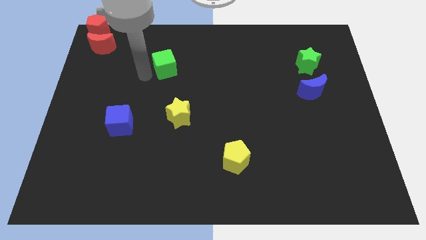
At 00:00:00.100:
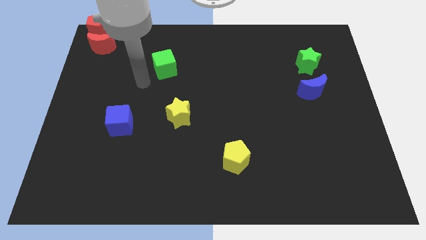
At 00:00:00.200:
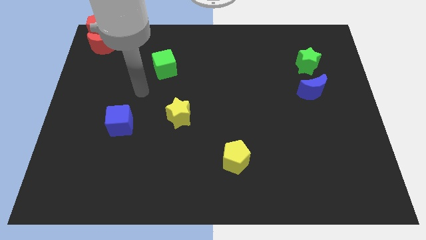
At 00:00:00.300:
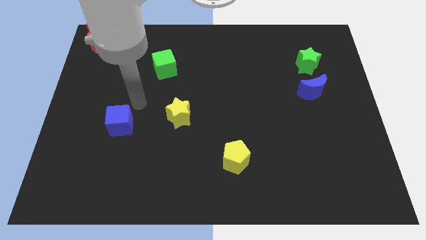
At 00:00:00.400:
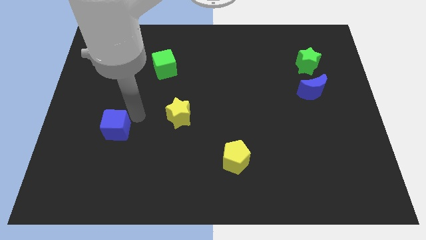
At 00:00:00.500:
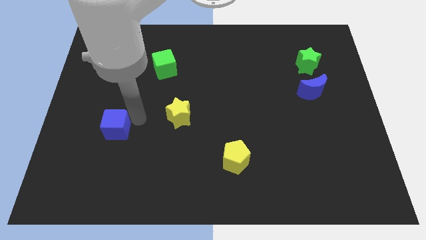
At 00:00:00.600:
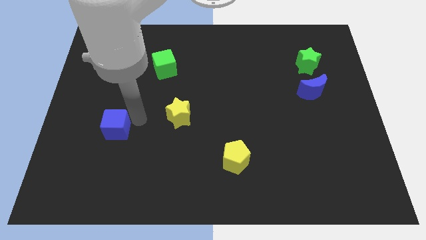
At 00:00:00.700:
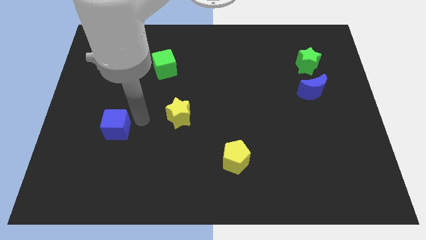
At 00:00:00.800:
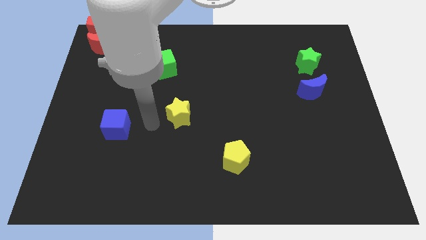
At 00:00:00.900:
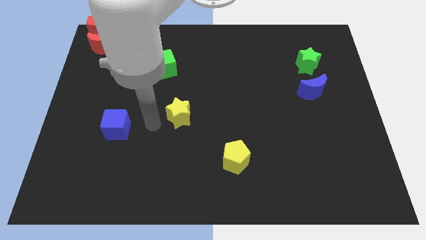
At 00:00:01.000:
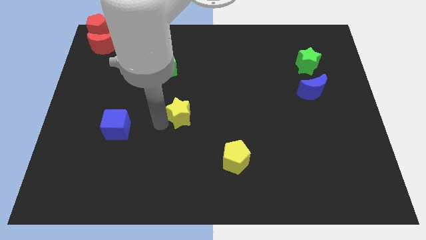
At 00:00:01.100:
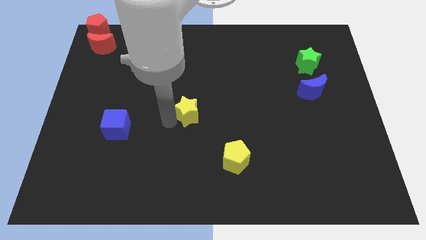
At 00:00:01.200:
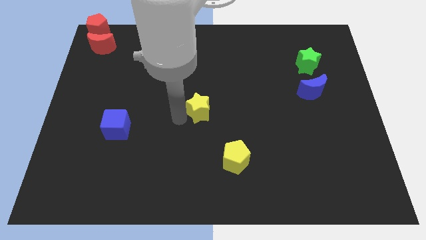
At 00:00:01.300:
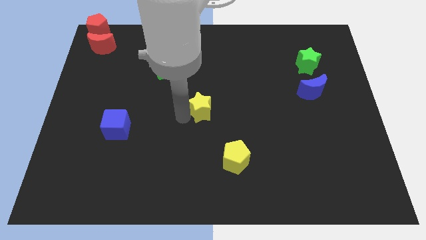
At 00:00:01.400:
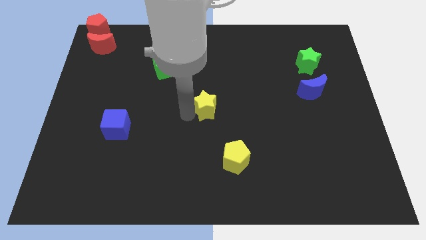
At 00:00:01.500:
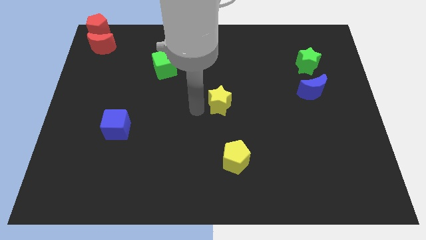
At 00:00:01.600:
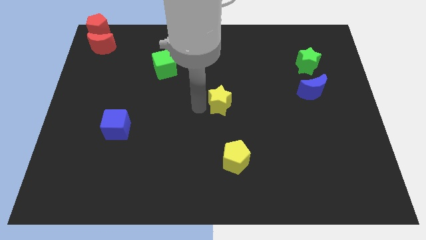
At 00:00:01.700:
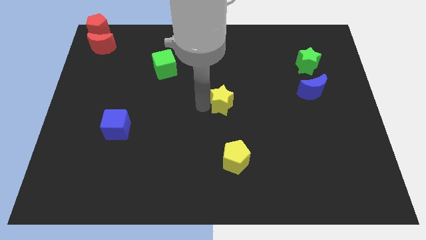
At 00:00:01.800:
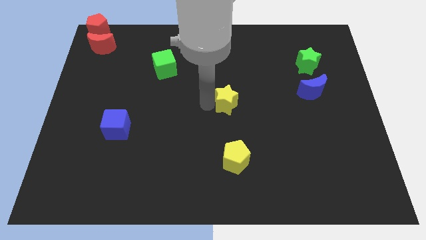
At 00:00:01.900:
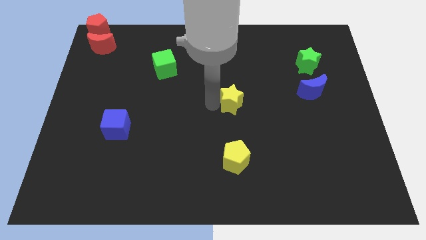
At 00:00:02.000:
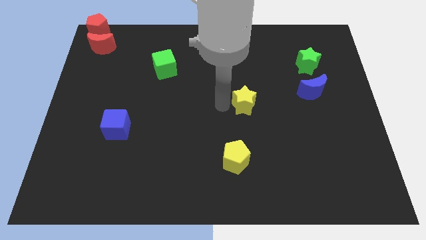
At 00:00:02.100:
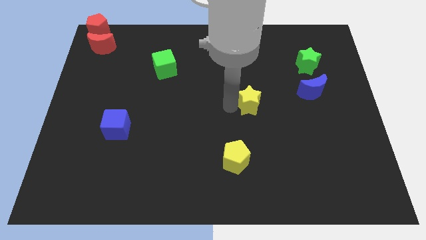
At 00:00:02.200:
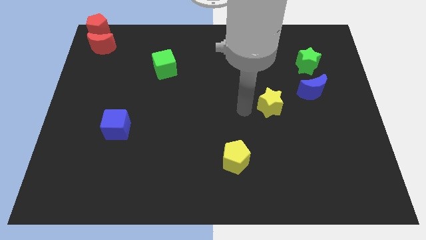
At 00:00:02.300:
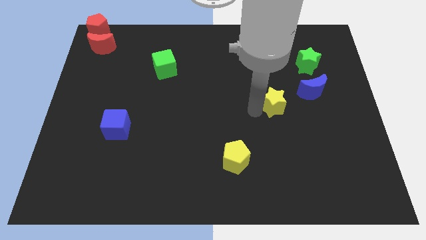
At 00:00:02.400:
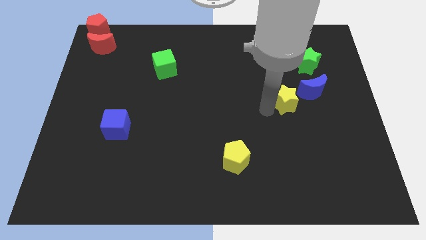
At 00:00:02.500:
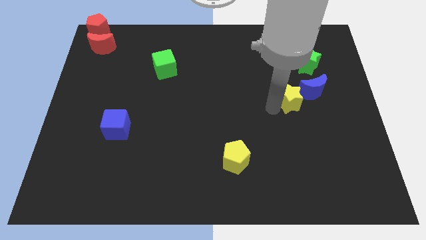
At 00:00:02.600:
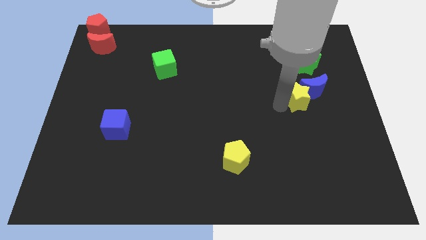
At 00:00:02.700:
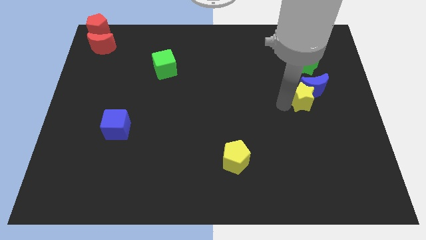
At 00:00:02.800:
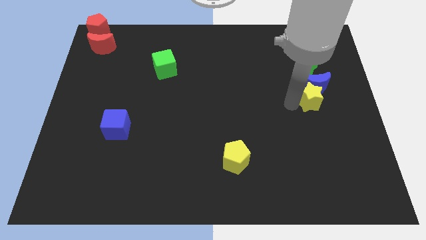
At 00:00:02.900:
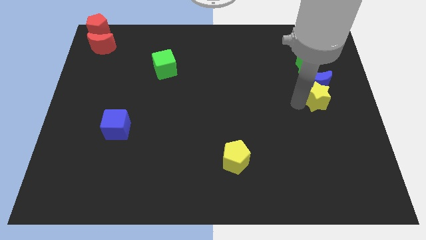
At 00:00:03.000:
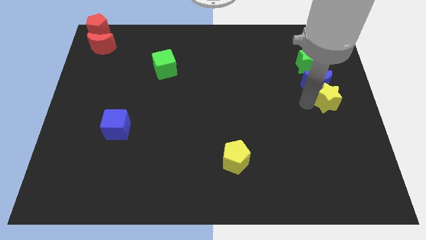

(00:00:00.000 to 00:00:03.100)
place yellow star at the bottom of blue moon

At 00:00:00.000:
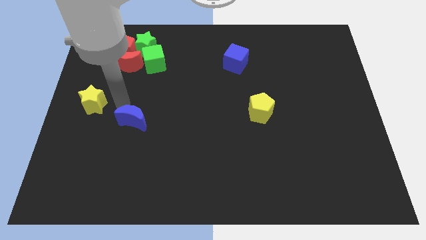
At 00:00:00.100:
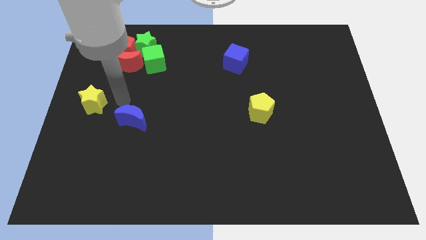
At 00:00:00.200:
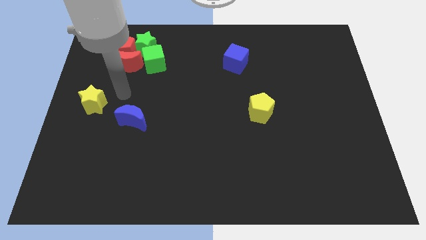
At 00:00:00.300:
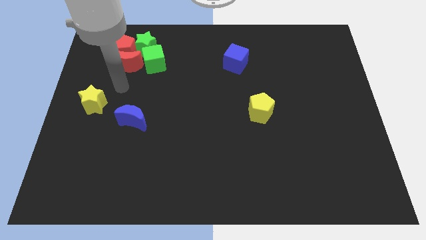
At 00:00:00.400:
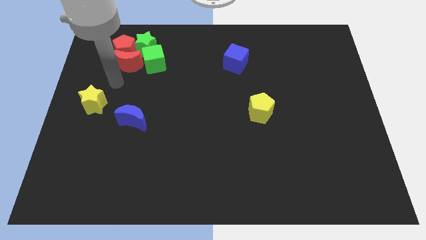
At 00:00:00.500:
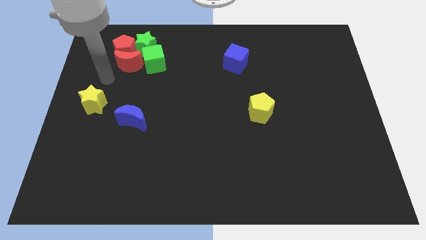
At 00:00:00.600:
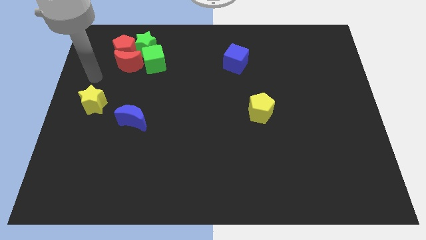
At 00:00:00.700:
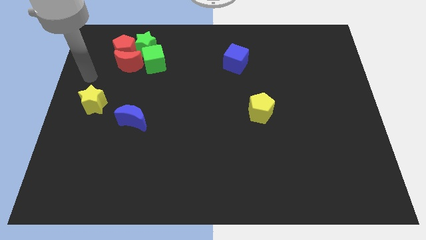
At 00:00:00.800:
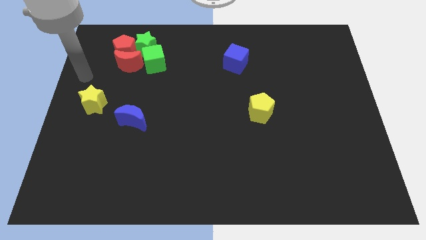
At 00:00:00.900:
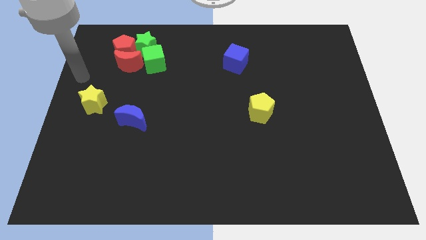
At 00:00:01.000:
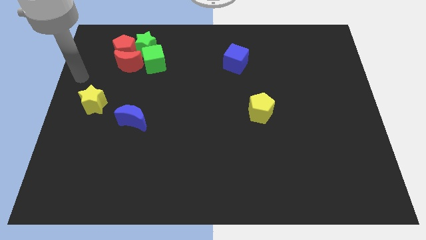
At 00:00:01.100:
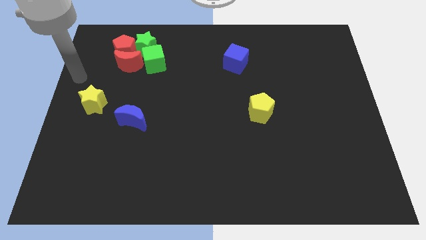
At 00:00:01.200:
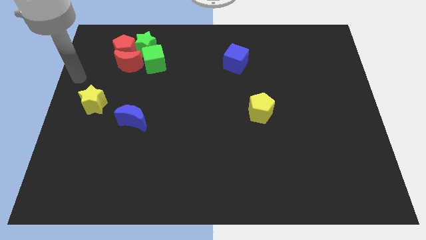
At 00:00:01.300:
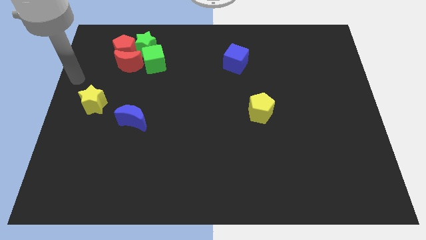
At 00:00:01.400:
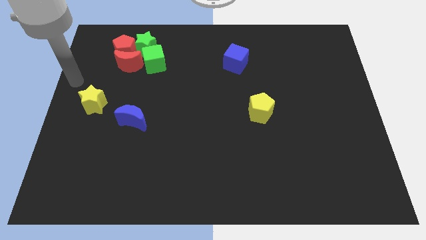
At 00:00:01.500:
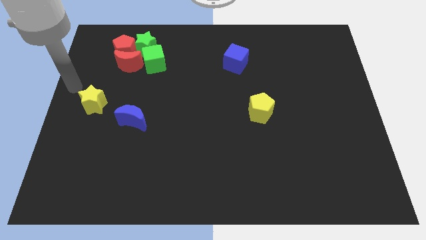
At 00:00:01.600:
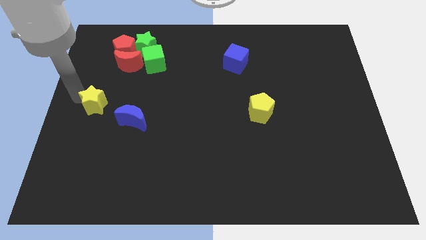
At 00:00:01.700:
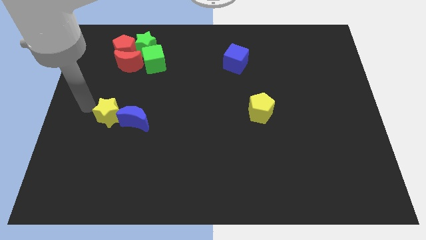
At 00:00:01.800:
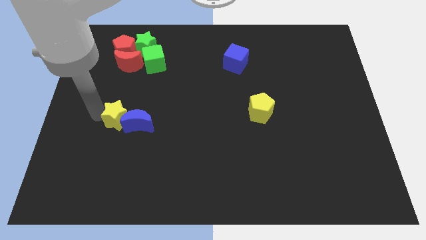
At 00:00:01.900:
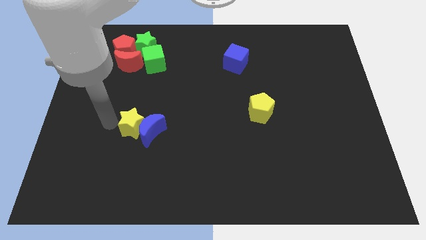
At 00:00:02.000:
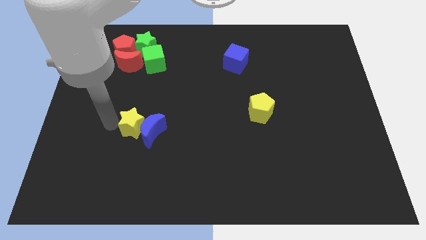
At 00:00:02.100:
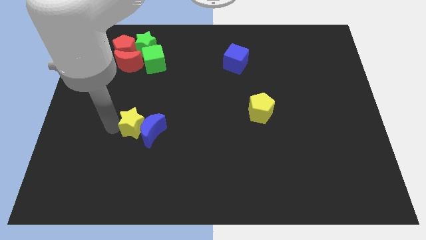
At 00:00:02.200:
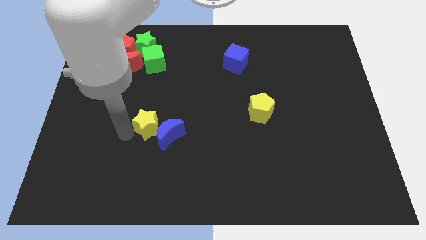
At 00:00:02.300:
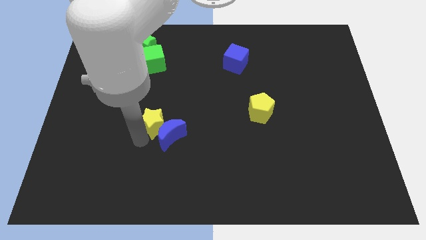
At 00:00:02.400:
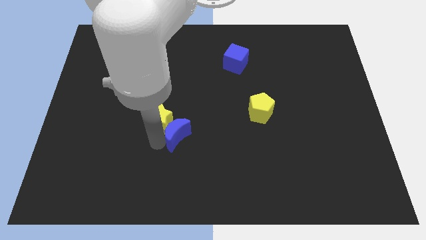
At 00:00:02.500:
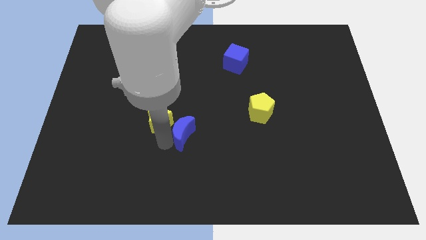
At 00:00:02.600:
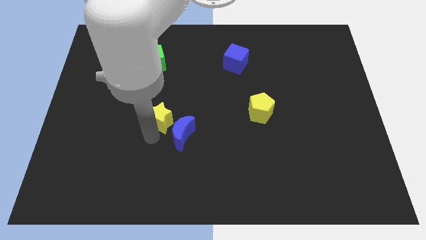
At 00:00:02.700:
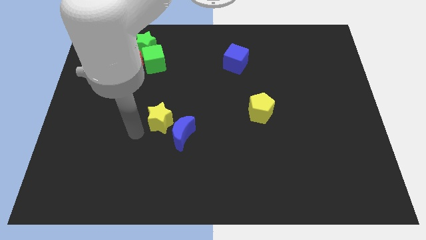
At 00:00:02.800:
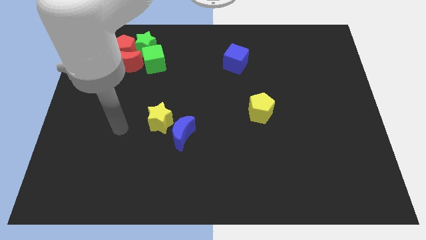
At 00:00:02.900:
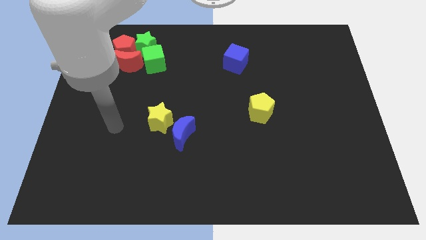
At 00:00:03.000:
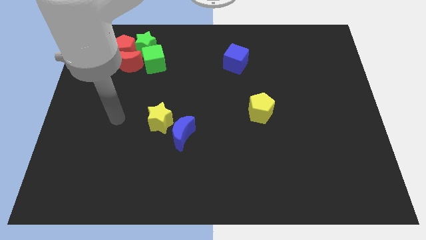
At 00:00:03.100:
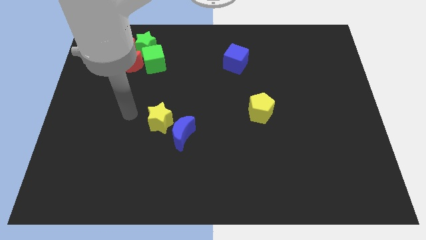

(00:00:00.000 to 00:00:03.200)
push blue crescent with yellow star

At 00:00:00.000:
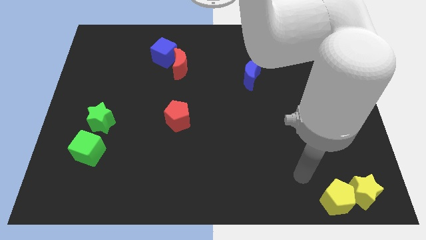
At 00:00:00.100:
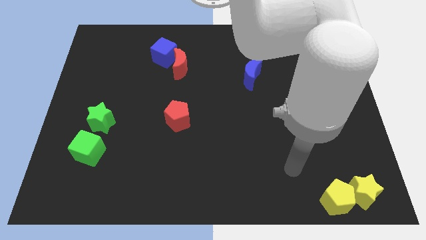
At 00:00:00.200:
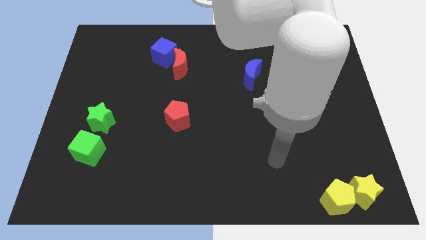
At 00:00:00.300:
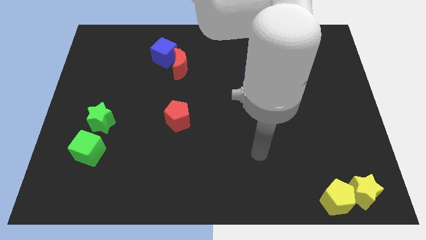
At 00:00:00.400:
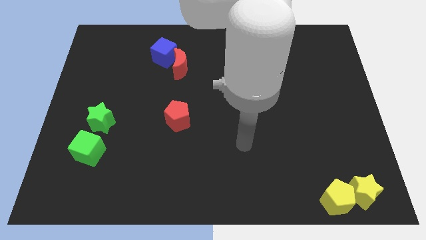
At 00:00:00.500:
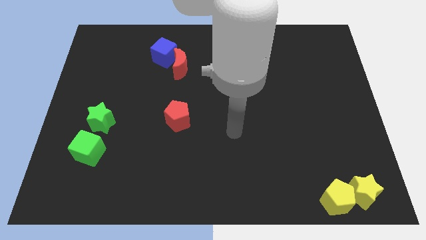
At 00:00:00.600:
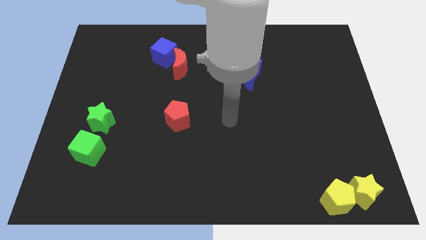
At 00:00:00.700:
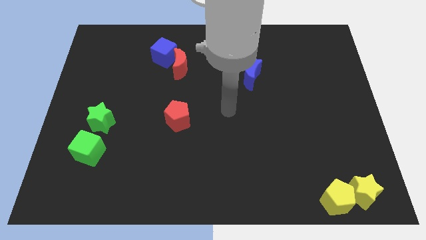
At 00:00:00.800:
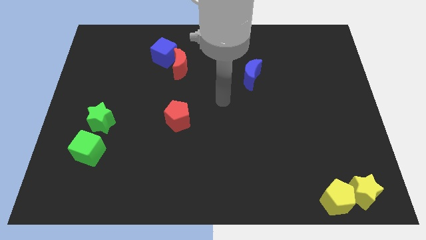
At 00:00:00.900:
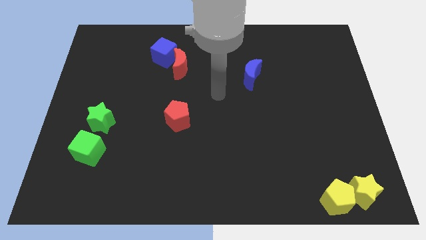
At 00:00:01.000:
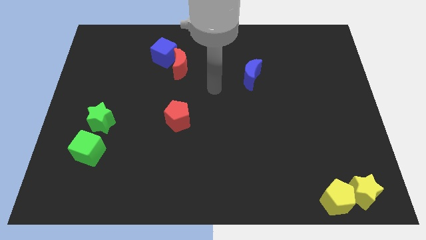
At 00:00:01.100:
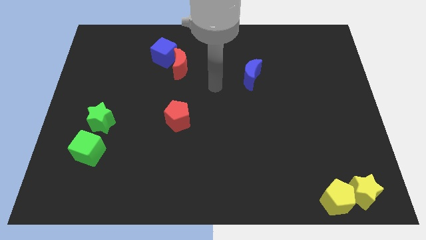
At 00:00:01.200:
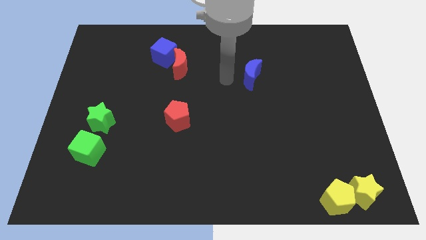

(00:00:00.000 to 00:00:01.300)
point your arm at the left of the blue crescent

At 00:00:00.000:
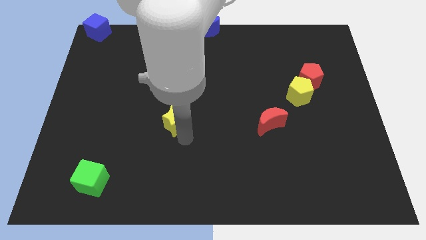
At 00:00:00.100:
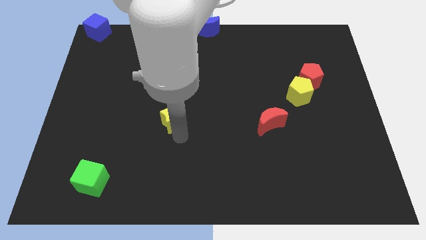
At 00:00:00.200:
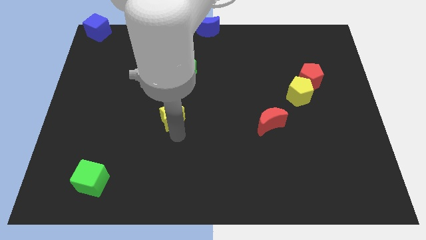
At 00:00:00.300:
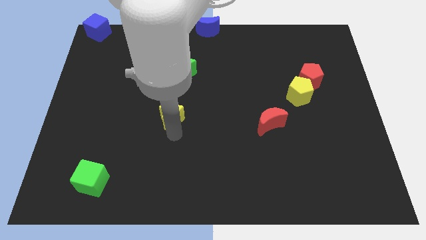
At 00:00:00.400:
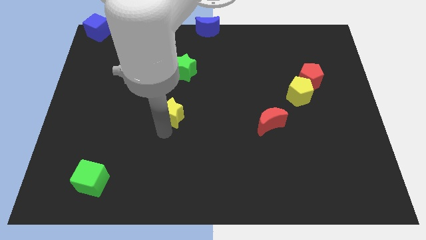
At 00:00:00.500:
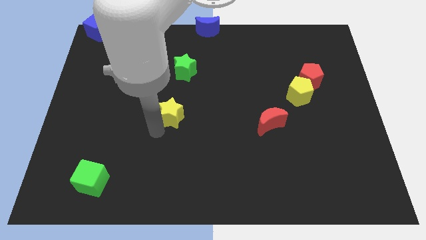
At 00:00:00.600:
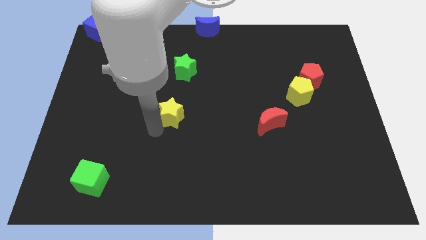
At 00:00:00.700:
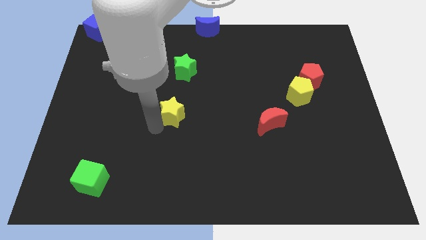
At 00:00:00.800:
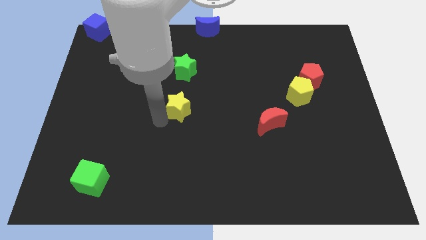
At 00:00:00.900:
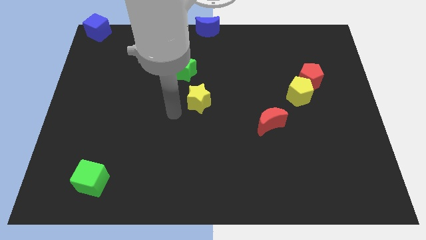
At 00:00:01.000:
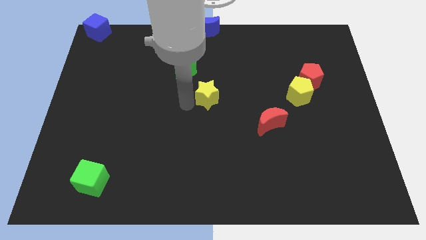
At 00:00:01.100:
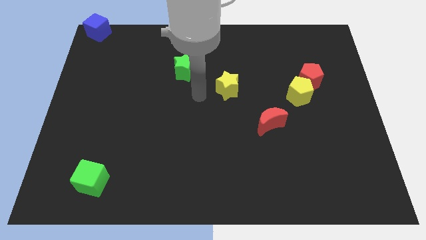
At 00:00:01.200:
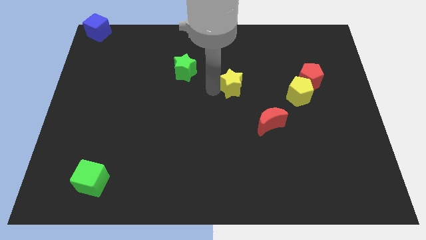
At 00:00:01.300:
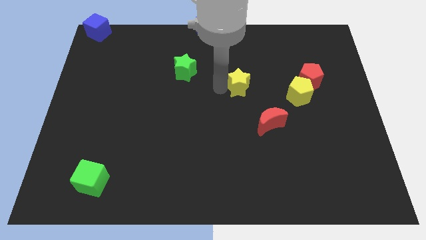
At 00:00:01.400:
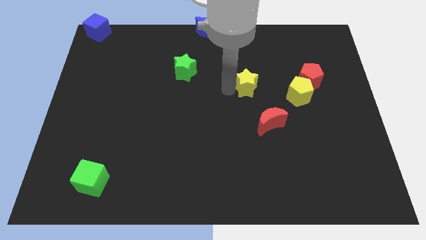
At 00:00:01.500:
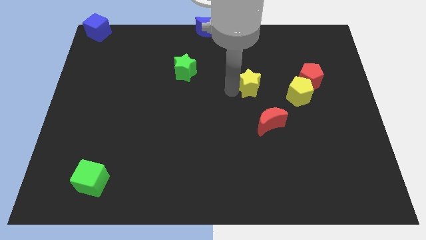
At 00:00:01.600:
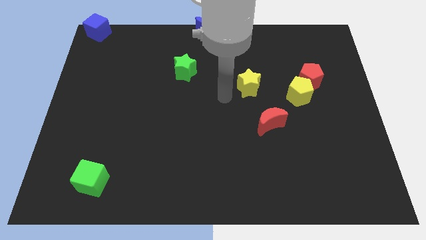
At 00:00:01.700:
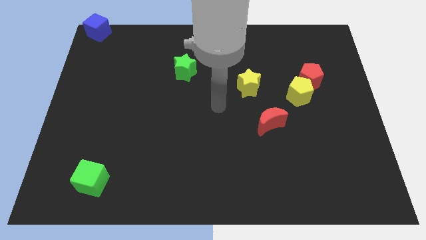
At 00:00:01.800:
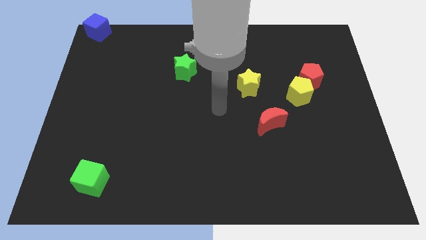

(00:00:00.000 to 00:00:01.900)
place the yellow star above the red moon
